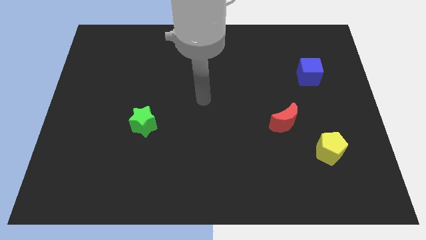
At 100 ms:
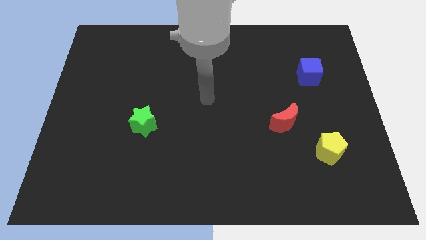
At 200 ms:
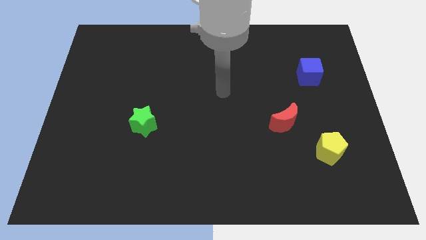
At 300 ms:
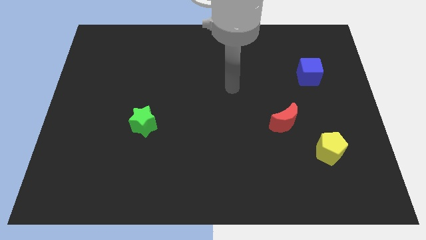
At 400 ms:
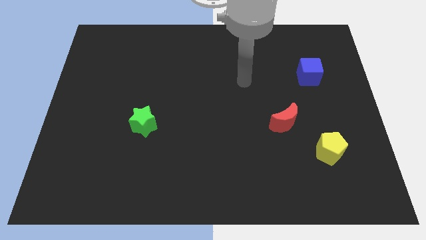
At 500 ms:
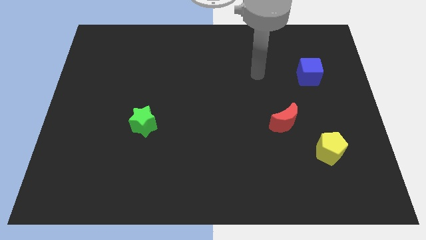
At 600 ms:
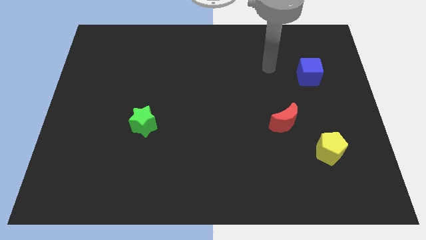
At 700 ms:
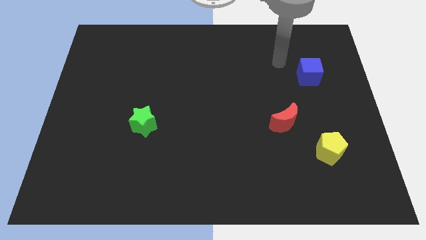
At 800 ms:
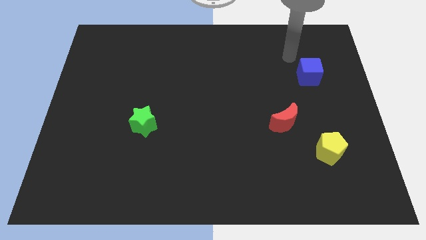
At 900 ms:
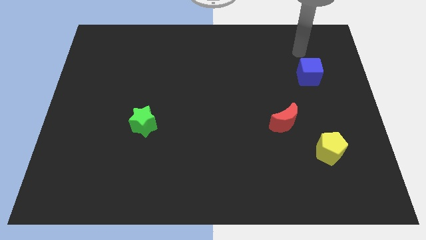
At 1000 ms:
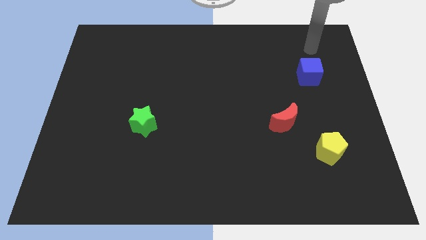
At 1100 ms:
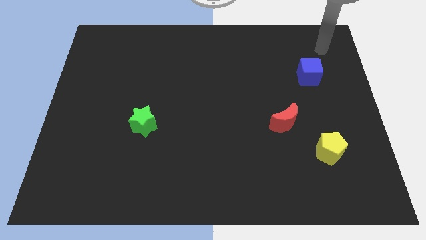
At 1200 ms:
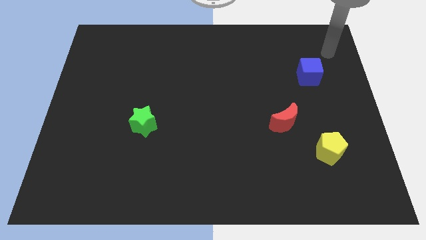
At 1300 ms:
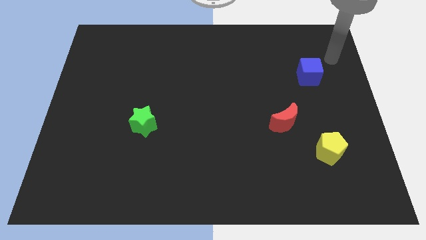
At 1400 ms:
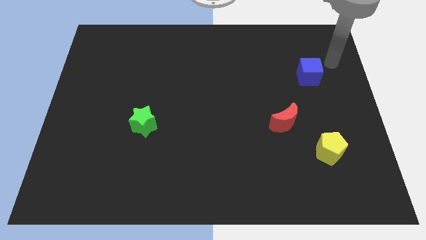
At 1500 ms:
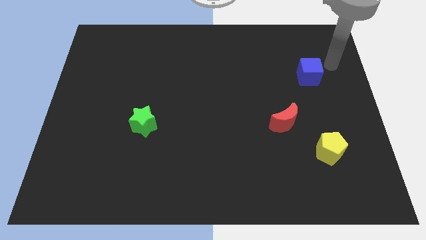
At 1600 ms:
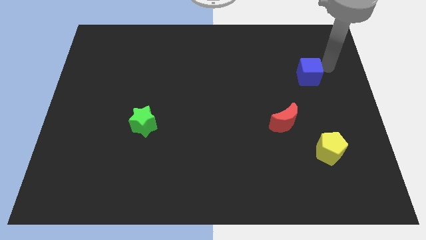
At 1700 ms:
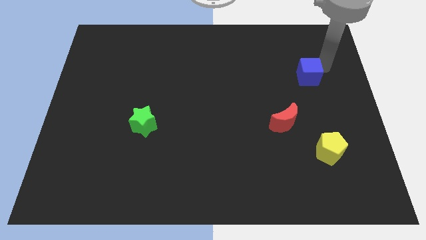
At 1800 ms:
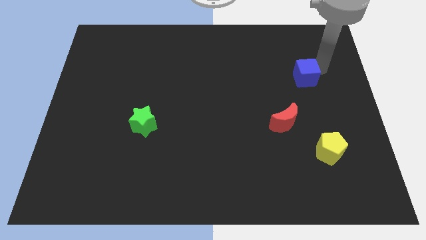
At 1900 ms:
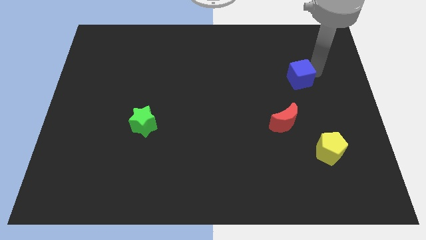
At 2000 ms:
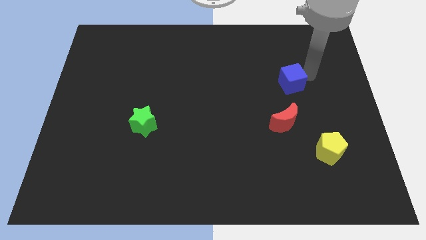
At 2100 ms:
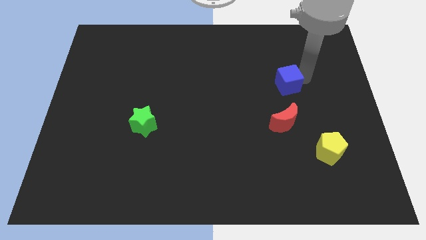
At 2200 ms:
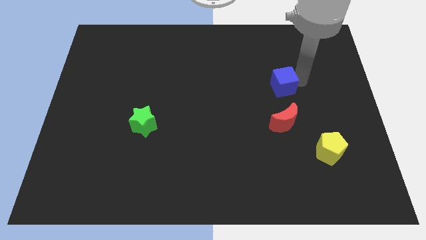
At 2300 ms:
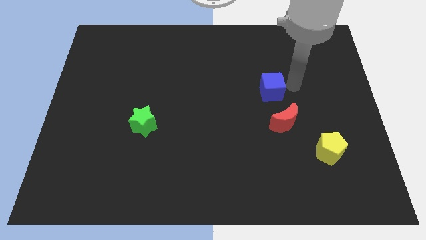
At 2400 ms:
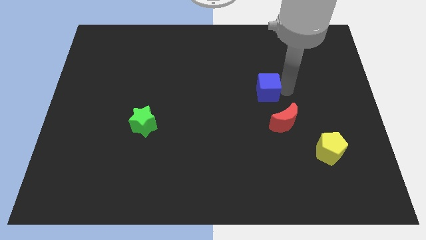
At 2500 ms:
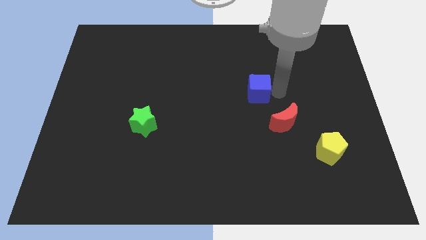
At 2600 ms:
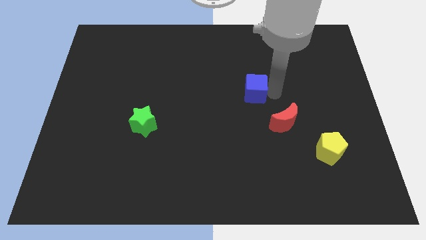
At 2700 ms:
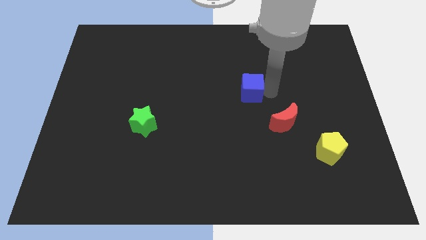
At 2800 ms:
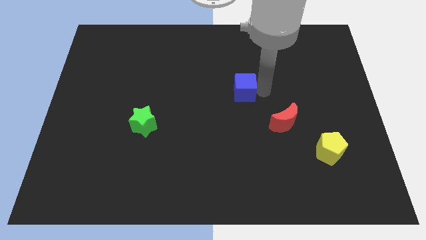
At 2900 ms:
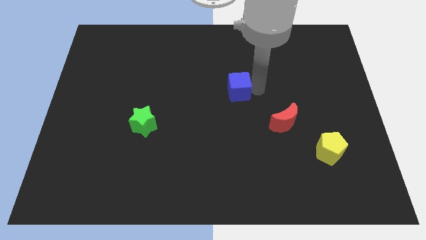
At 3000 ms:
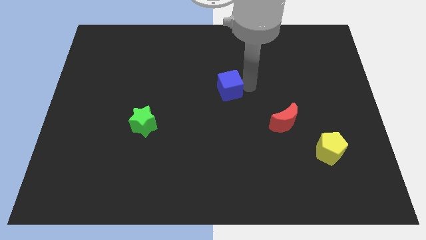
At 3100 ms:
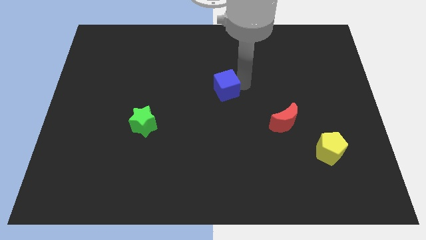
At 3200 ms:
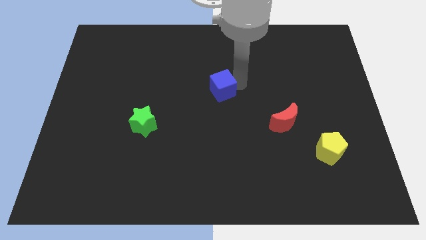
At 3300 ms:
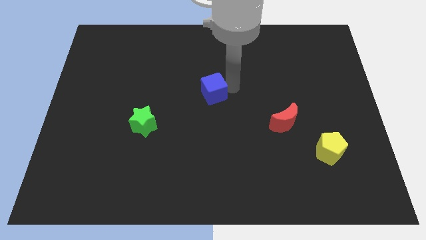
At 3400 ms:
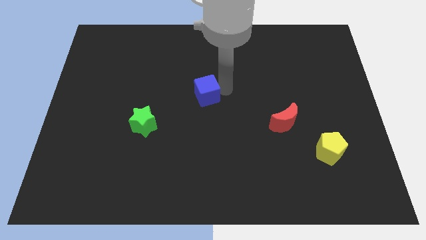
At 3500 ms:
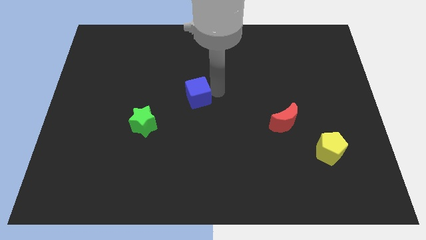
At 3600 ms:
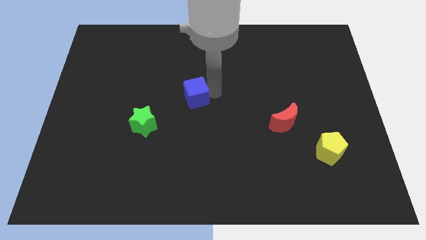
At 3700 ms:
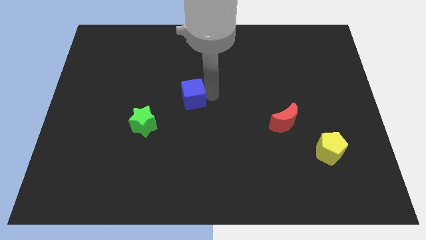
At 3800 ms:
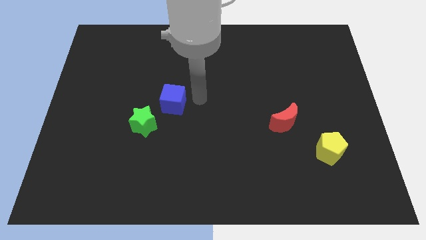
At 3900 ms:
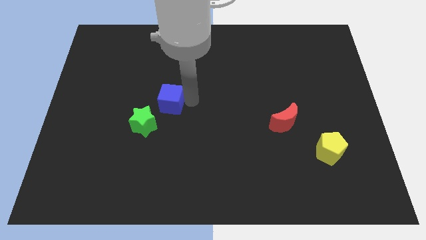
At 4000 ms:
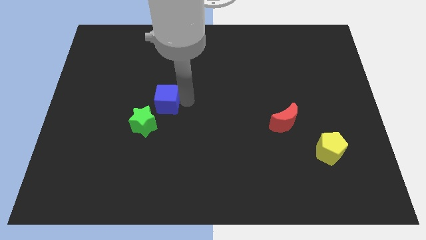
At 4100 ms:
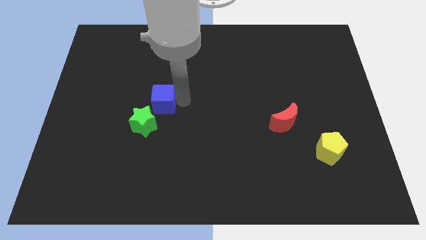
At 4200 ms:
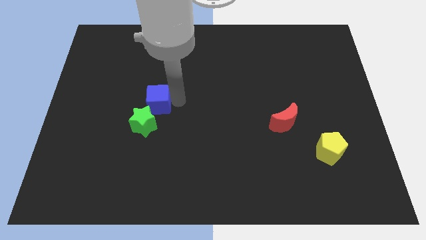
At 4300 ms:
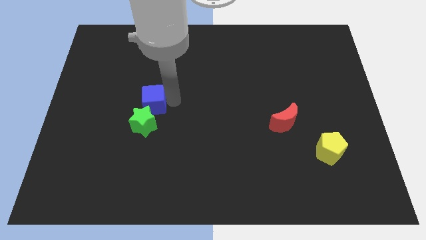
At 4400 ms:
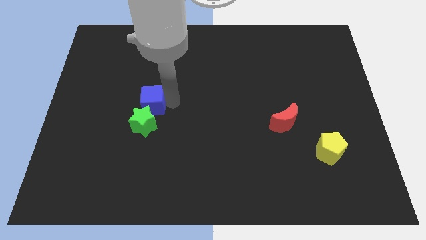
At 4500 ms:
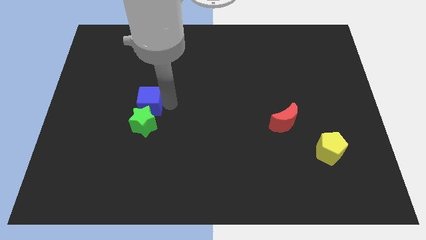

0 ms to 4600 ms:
push the blue cube close to the star

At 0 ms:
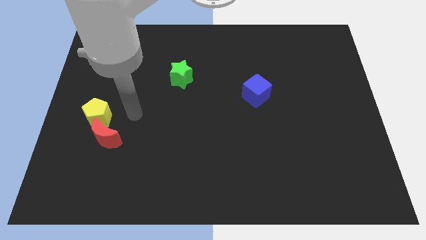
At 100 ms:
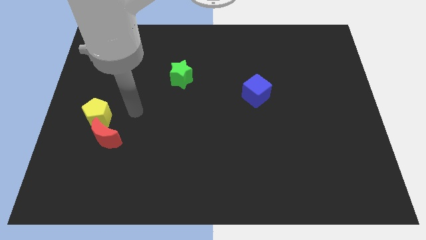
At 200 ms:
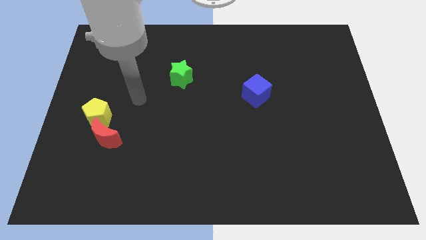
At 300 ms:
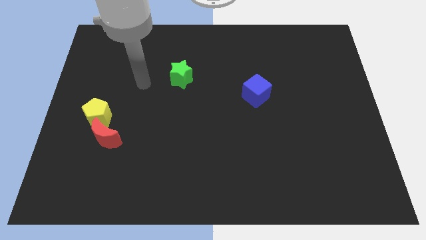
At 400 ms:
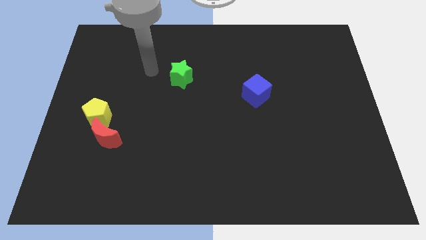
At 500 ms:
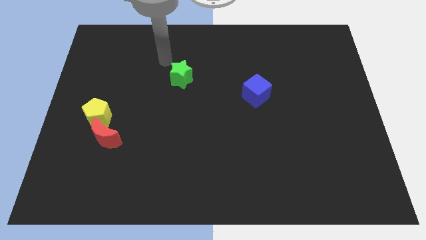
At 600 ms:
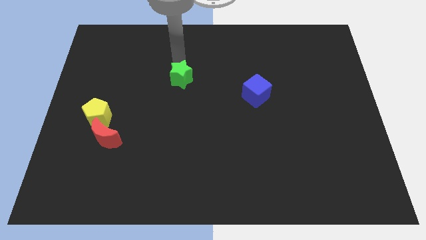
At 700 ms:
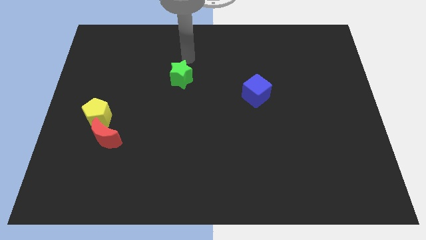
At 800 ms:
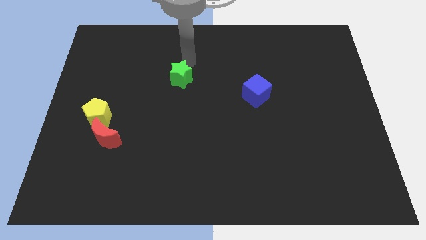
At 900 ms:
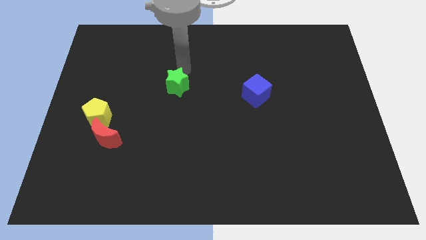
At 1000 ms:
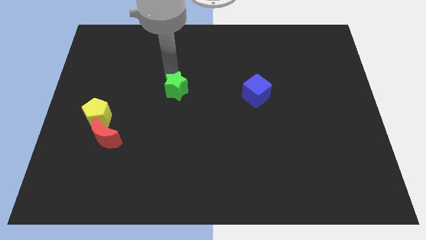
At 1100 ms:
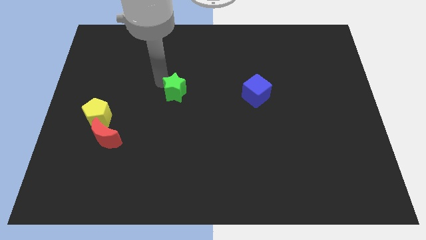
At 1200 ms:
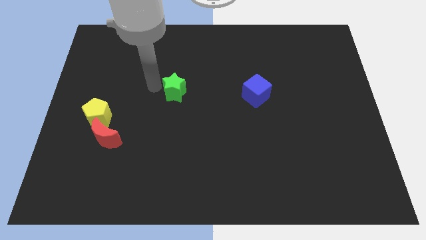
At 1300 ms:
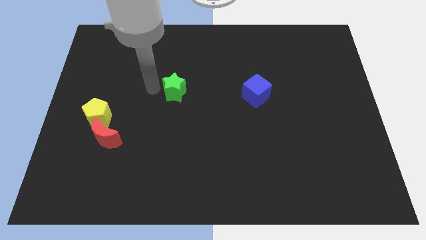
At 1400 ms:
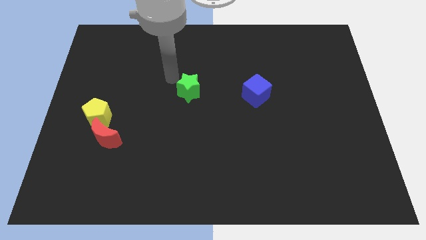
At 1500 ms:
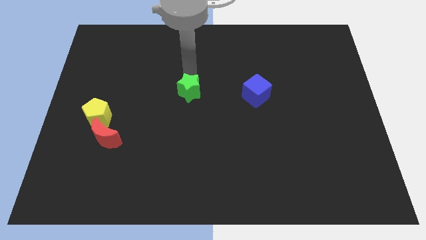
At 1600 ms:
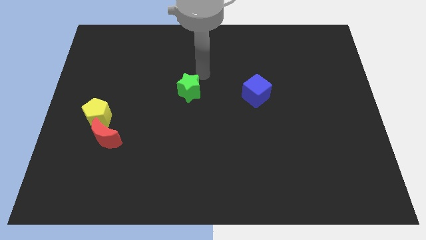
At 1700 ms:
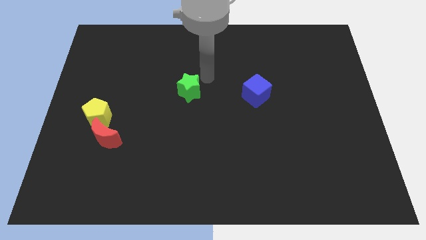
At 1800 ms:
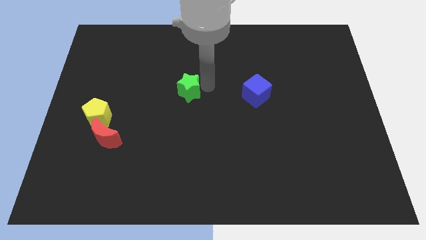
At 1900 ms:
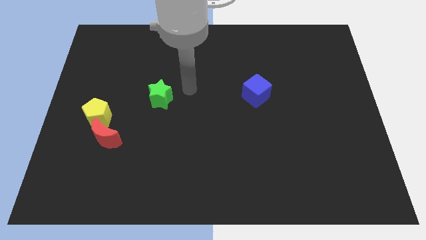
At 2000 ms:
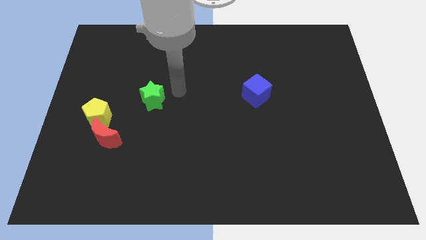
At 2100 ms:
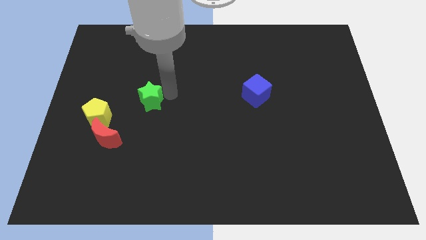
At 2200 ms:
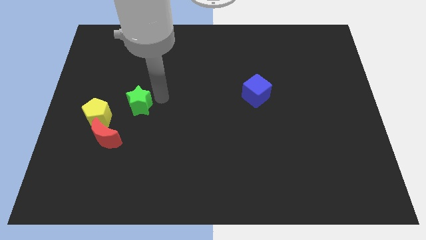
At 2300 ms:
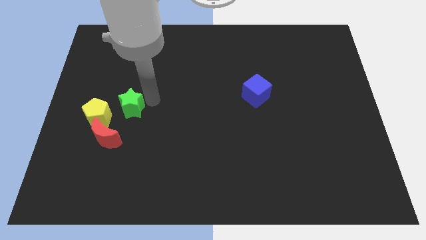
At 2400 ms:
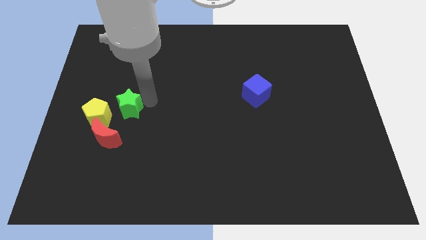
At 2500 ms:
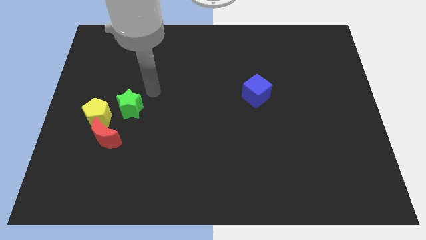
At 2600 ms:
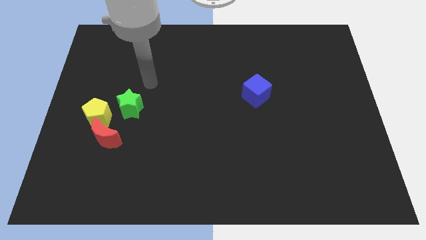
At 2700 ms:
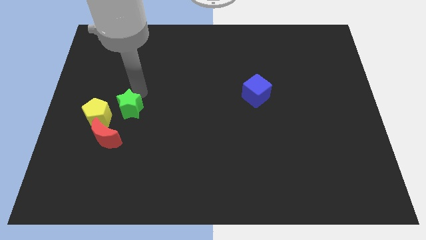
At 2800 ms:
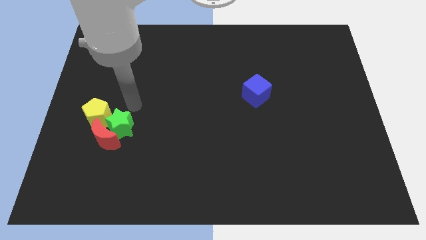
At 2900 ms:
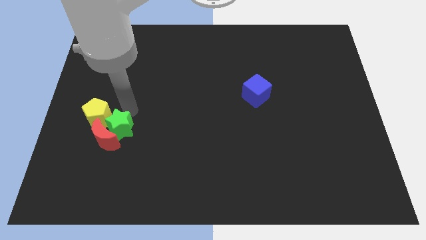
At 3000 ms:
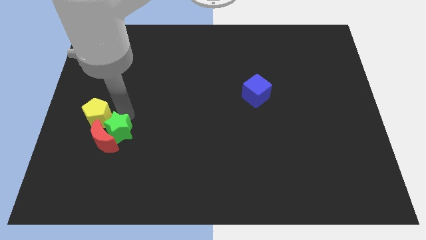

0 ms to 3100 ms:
put the green block close to the red moon

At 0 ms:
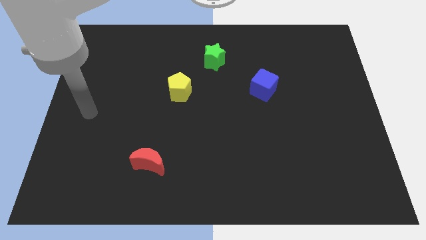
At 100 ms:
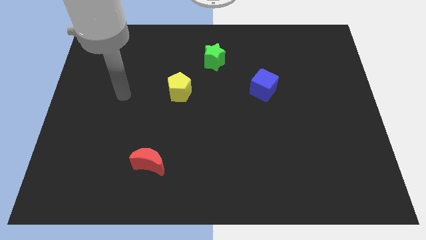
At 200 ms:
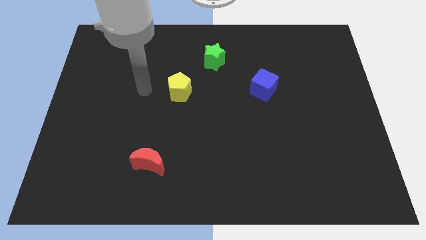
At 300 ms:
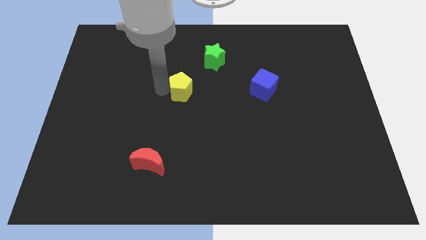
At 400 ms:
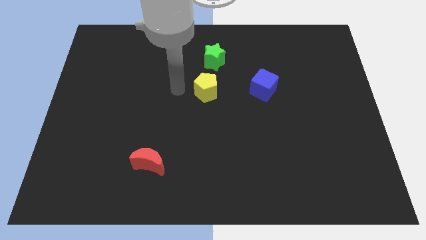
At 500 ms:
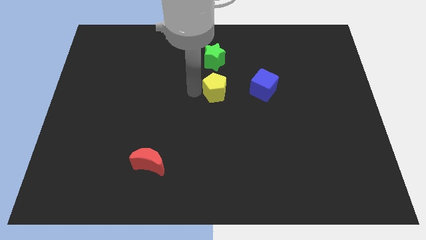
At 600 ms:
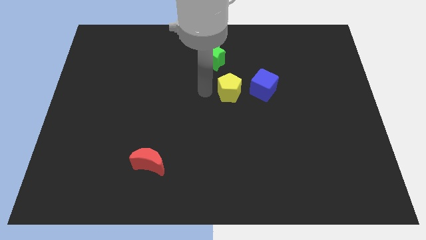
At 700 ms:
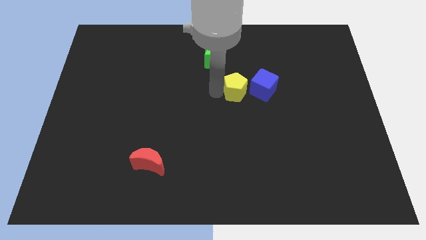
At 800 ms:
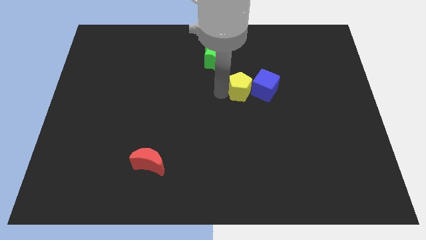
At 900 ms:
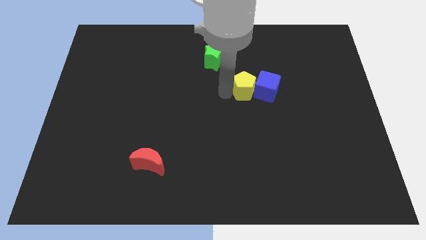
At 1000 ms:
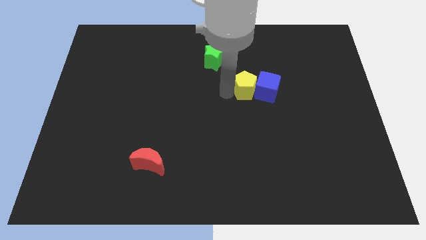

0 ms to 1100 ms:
slide the pentagon to the cube

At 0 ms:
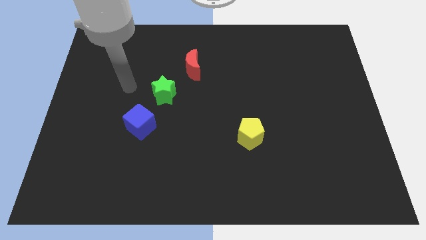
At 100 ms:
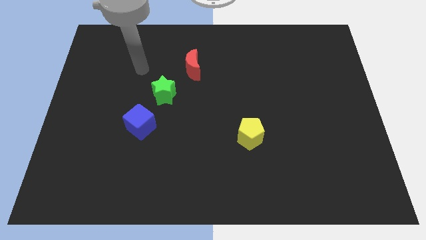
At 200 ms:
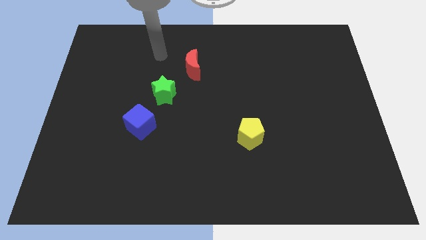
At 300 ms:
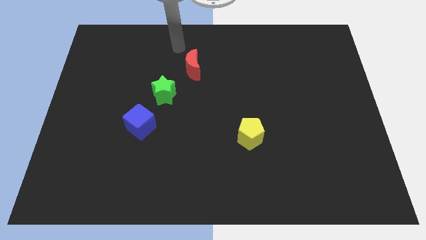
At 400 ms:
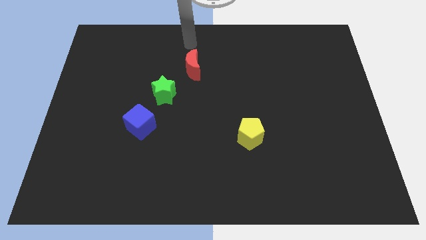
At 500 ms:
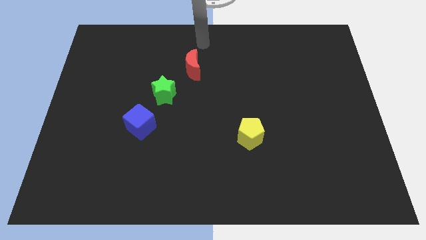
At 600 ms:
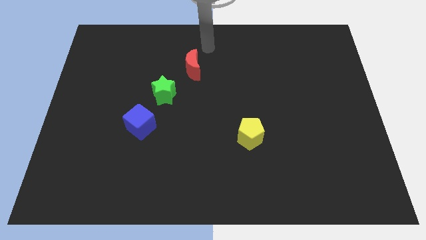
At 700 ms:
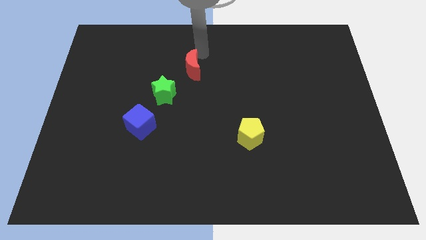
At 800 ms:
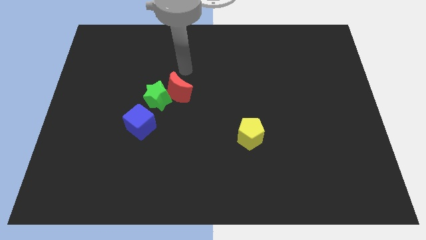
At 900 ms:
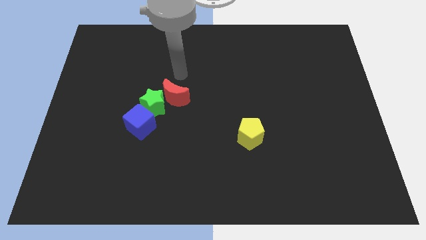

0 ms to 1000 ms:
push the red moon to the green block
